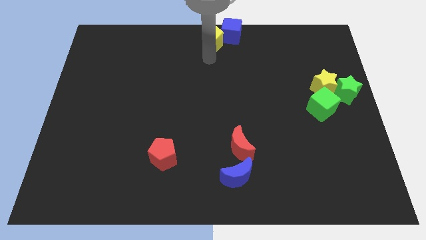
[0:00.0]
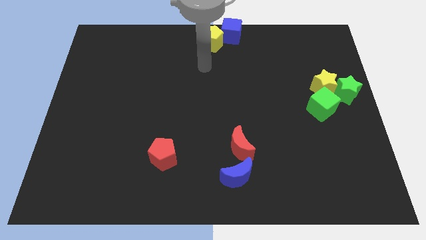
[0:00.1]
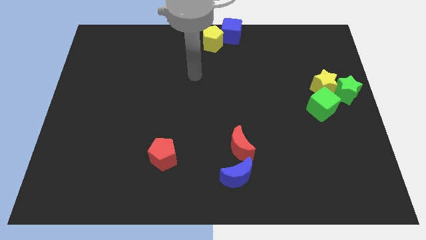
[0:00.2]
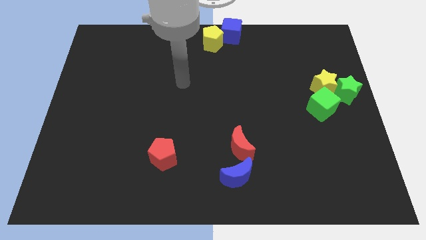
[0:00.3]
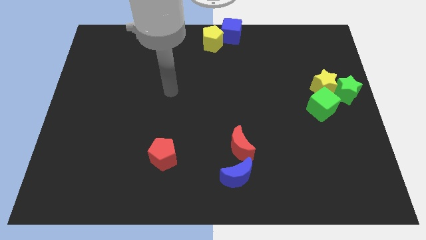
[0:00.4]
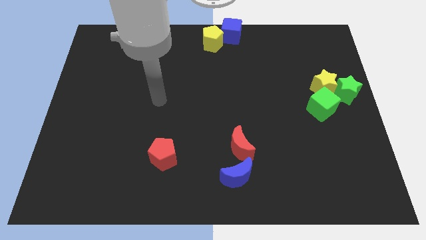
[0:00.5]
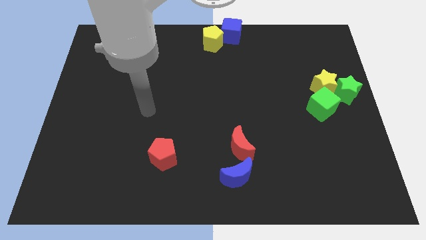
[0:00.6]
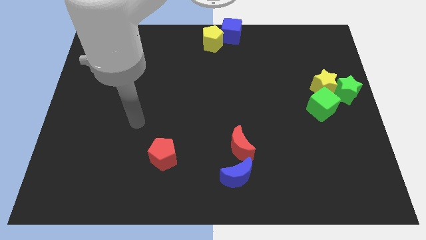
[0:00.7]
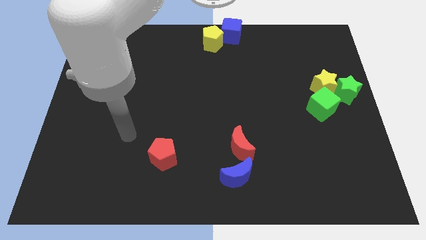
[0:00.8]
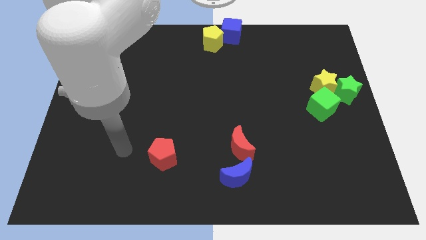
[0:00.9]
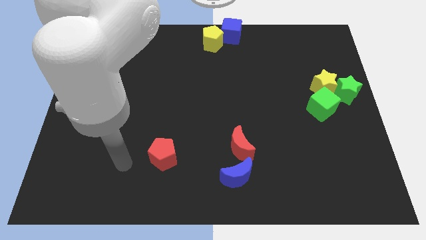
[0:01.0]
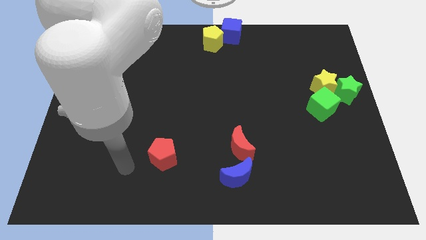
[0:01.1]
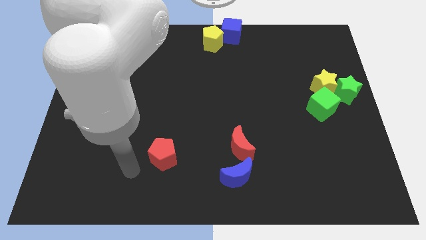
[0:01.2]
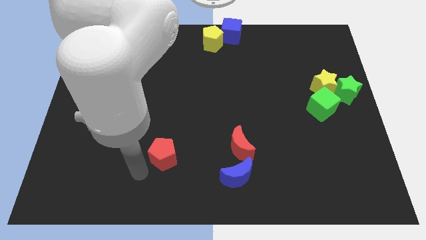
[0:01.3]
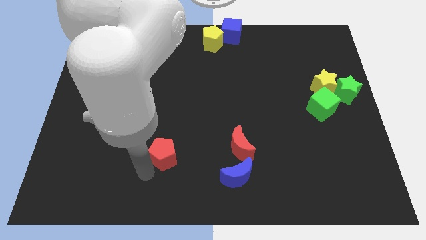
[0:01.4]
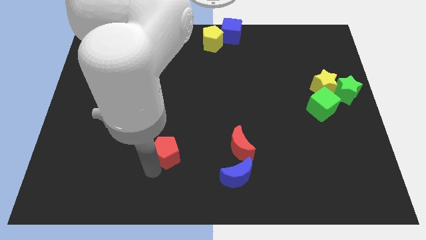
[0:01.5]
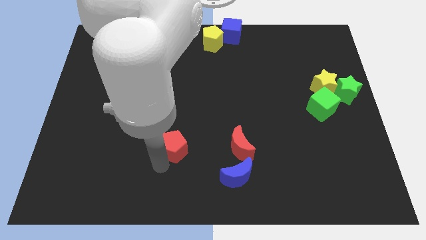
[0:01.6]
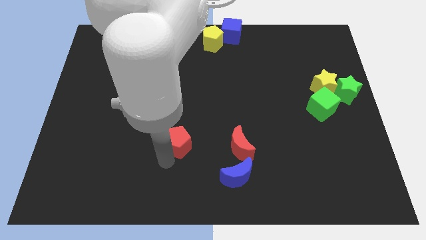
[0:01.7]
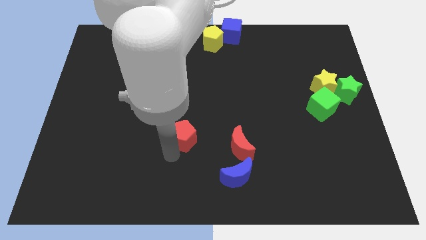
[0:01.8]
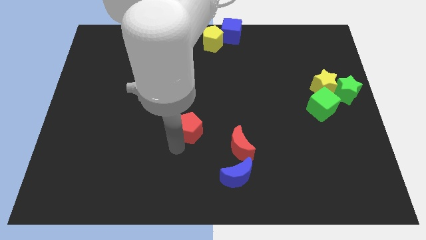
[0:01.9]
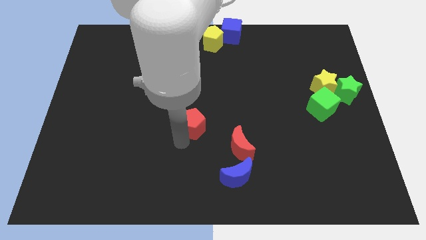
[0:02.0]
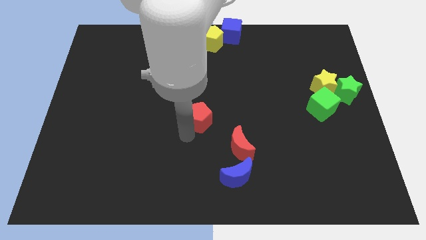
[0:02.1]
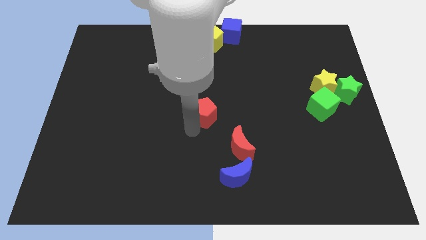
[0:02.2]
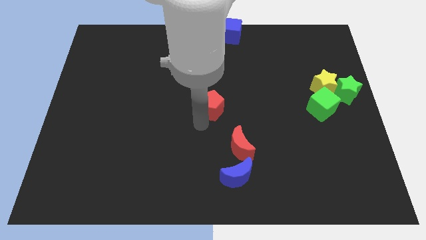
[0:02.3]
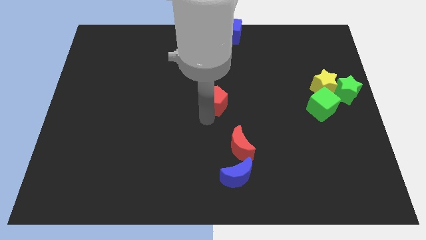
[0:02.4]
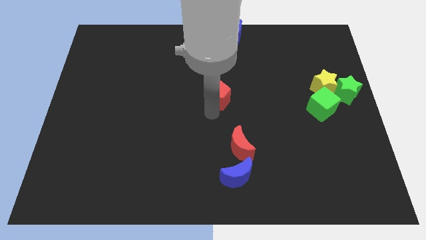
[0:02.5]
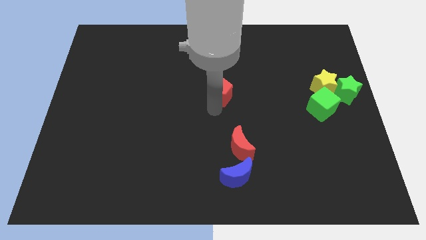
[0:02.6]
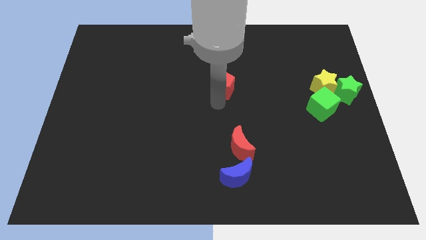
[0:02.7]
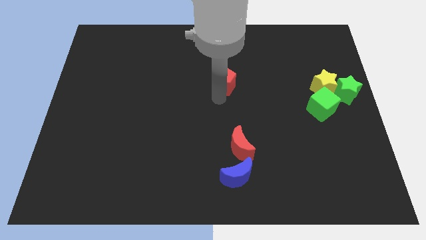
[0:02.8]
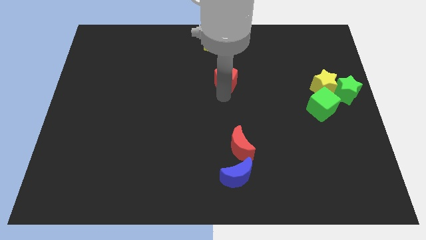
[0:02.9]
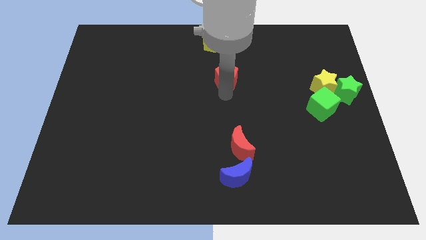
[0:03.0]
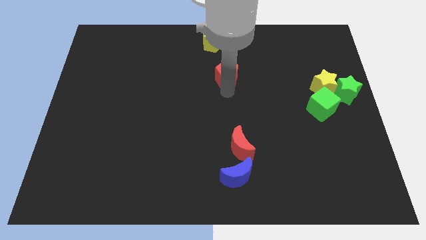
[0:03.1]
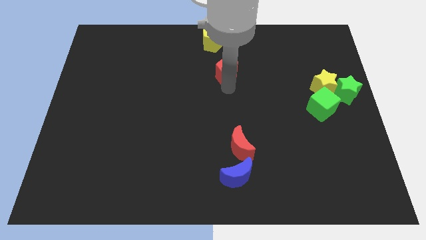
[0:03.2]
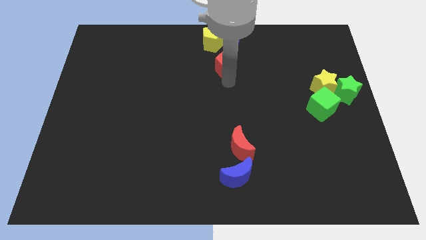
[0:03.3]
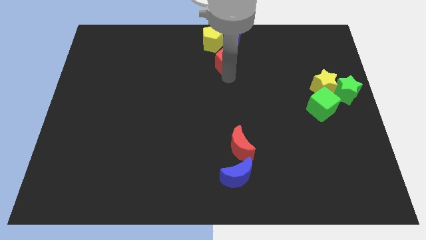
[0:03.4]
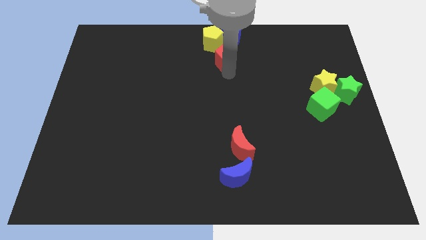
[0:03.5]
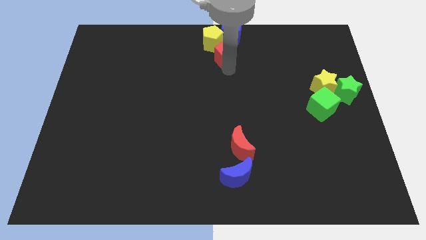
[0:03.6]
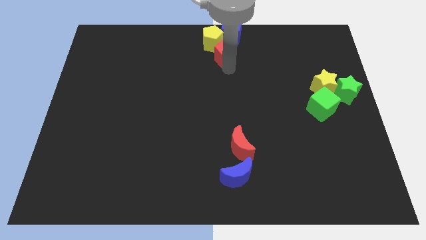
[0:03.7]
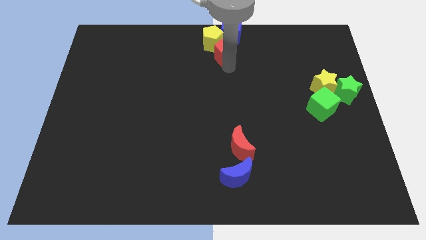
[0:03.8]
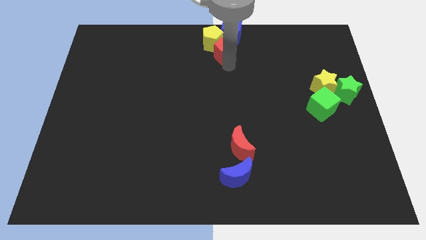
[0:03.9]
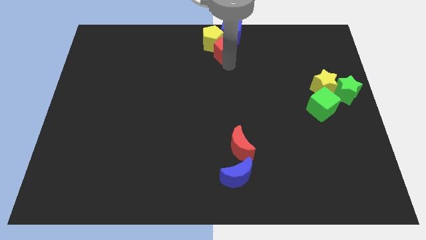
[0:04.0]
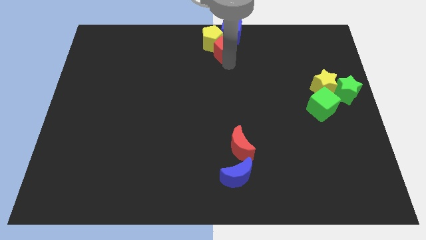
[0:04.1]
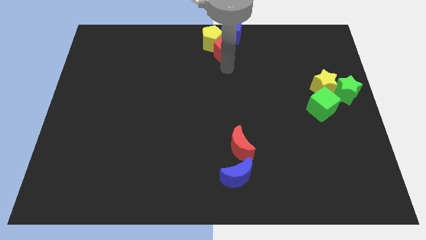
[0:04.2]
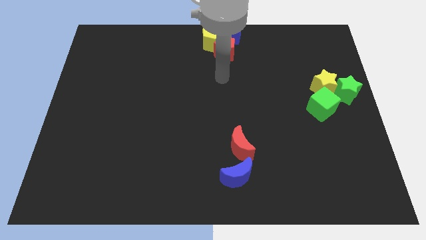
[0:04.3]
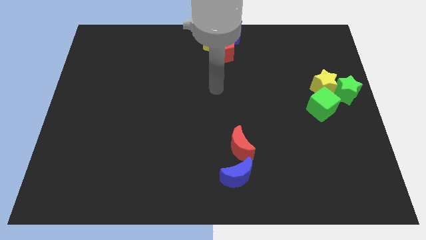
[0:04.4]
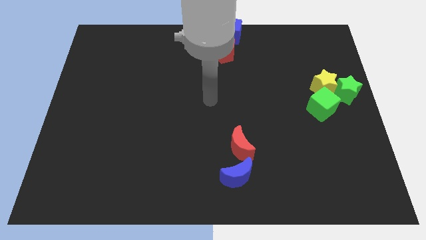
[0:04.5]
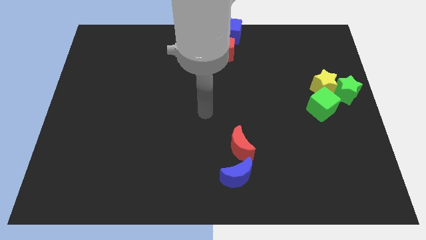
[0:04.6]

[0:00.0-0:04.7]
place the red pentagon below the blue cube

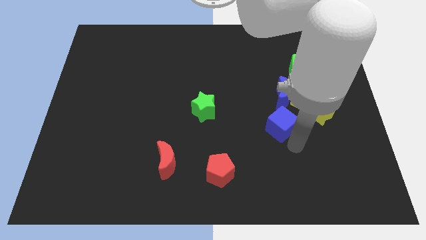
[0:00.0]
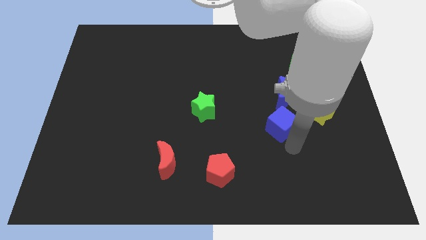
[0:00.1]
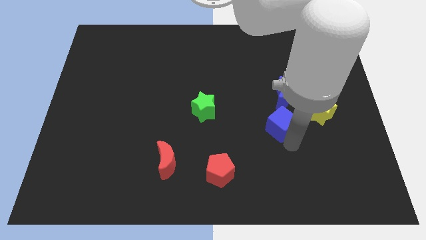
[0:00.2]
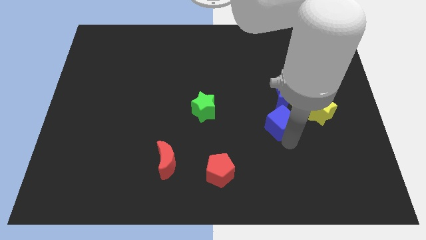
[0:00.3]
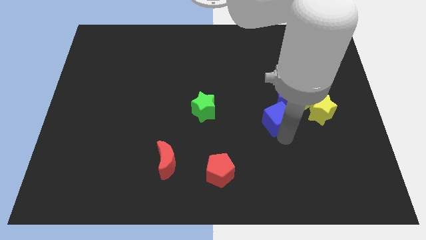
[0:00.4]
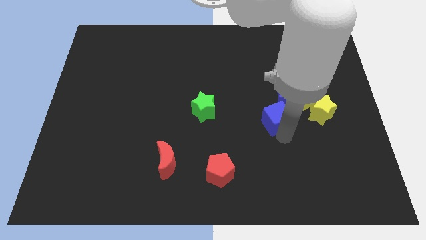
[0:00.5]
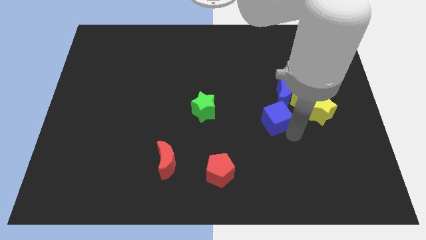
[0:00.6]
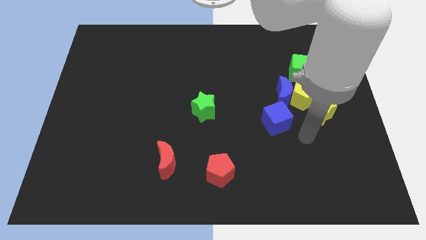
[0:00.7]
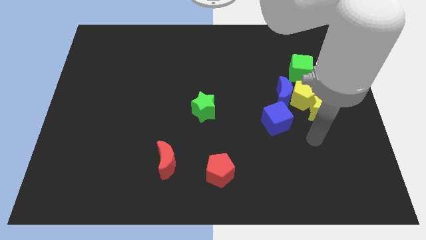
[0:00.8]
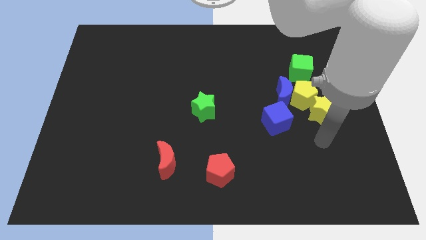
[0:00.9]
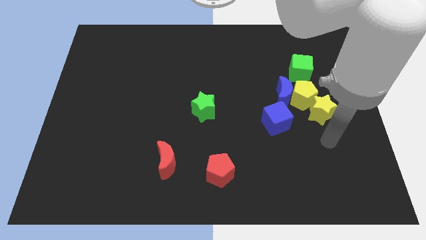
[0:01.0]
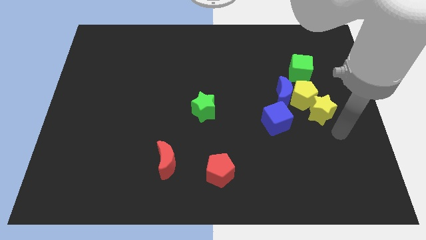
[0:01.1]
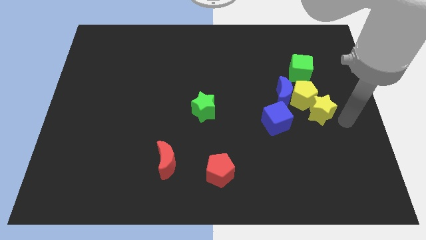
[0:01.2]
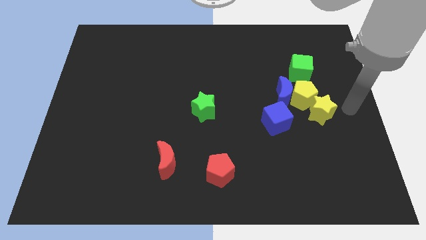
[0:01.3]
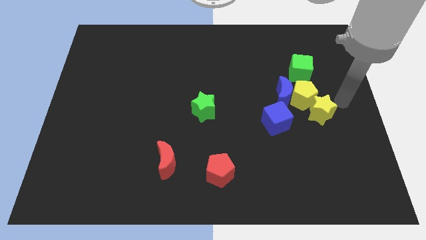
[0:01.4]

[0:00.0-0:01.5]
slide the blue cube slightly towards the blue moon

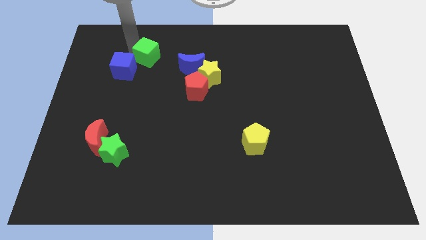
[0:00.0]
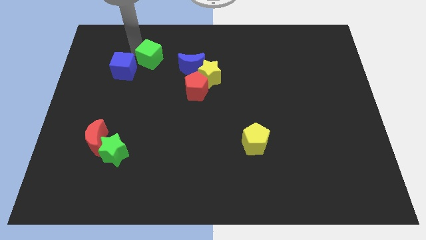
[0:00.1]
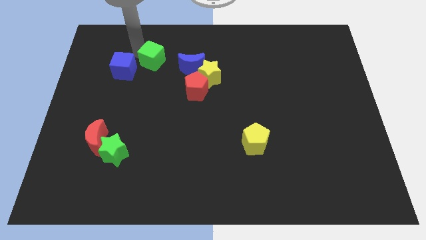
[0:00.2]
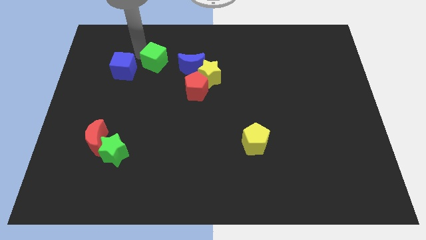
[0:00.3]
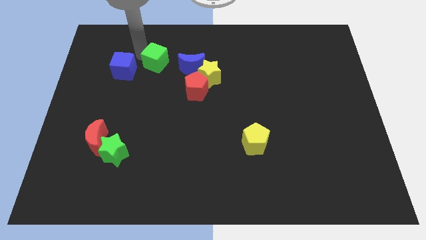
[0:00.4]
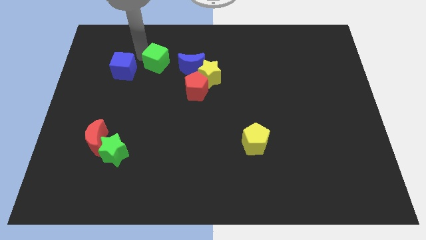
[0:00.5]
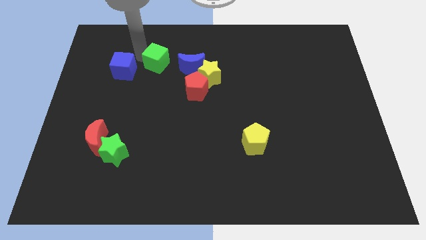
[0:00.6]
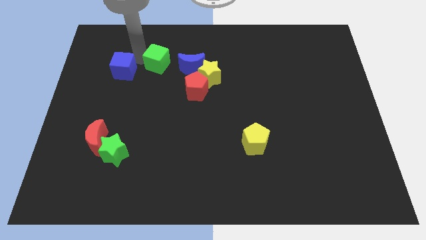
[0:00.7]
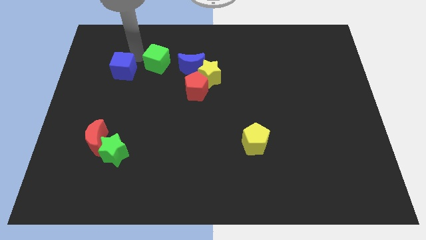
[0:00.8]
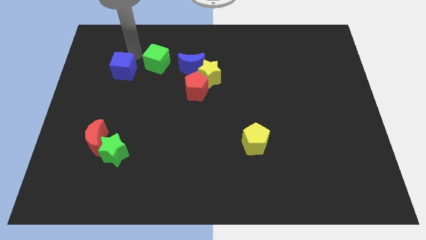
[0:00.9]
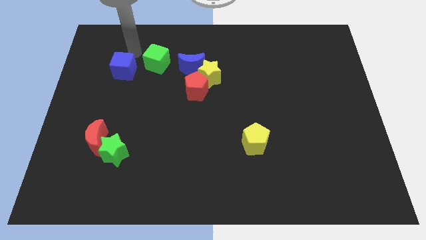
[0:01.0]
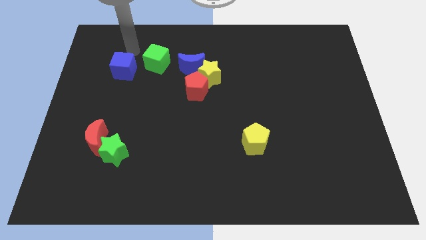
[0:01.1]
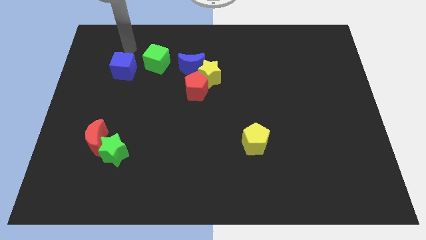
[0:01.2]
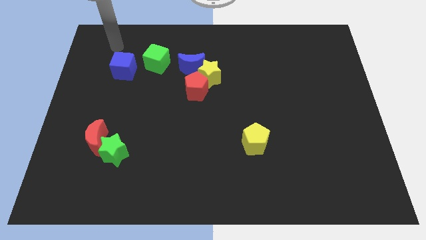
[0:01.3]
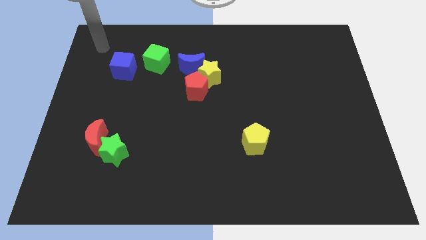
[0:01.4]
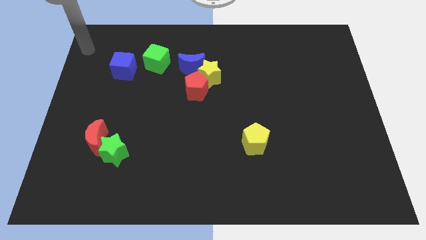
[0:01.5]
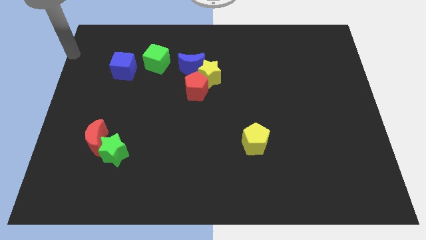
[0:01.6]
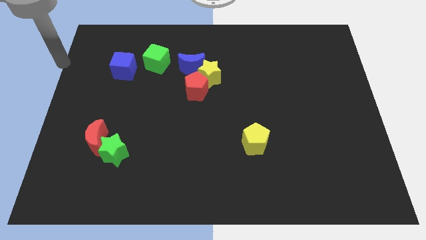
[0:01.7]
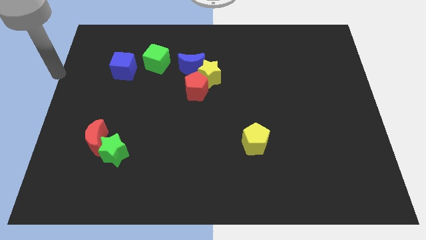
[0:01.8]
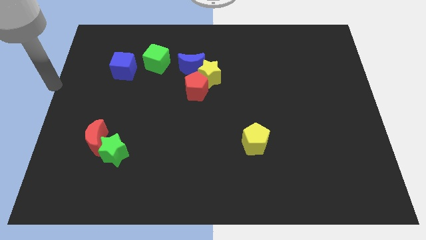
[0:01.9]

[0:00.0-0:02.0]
push the green cube towards the left side of the blue crescent

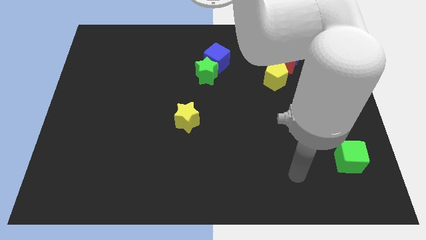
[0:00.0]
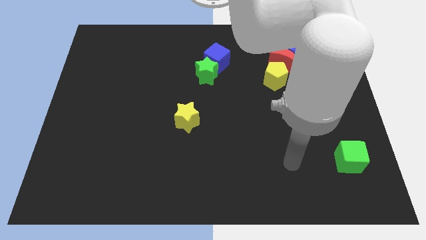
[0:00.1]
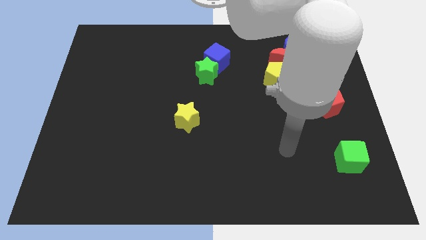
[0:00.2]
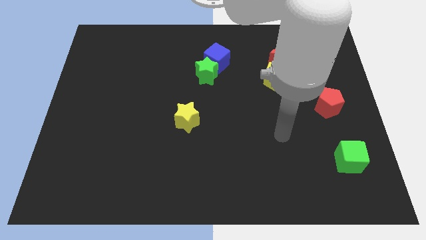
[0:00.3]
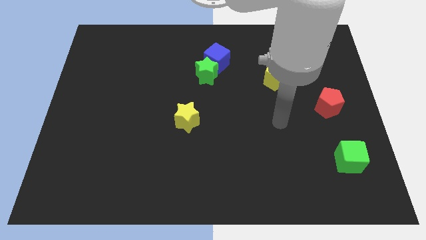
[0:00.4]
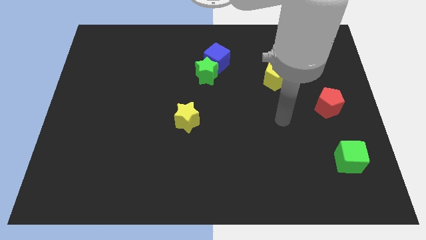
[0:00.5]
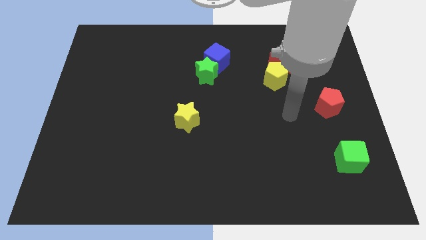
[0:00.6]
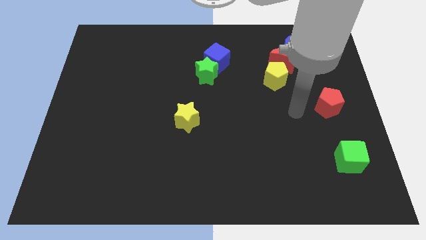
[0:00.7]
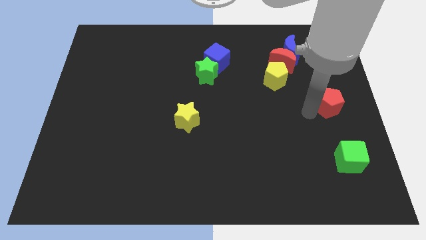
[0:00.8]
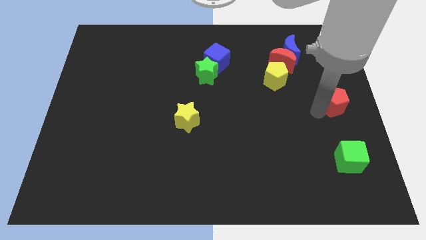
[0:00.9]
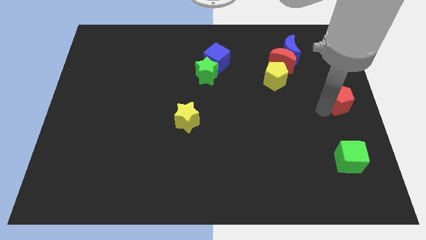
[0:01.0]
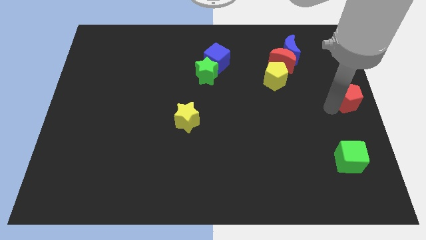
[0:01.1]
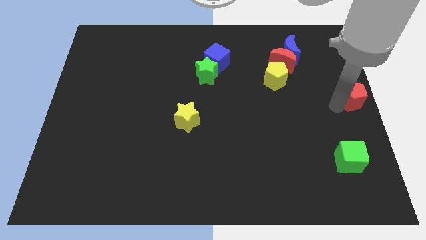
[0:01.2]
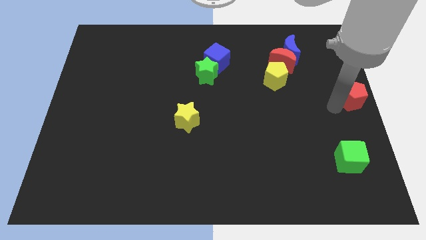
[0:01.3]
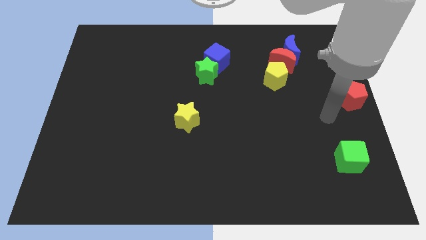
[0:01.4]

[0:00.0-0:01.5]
push red pentagon to right side of the board
